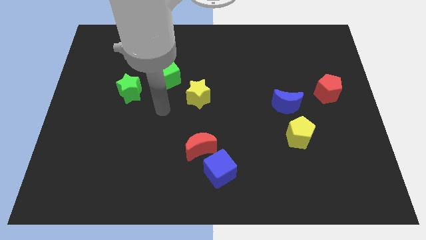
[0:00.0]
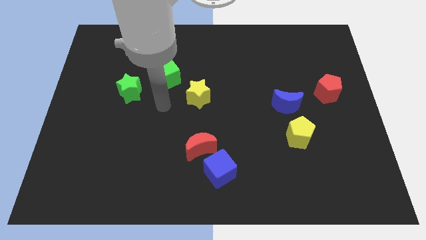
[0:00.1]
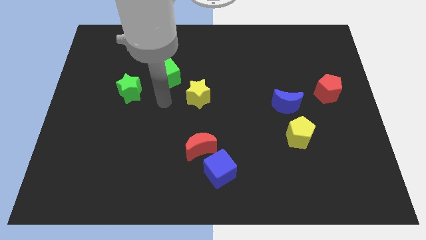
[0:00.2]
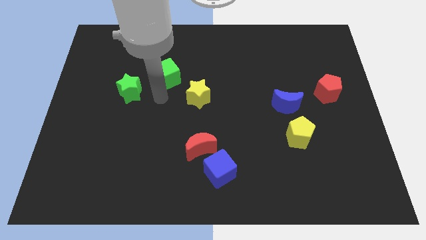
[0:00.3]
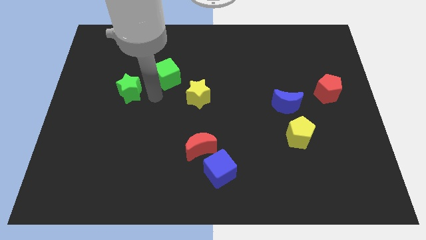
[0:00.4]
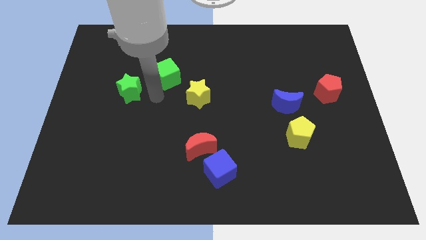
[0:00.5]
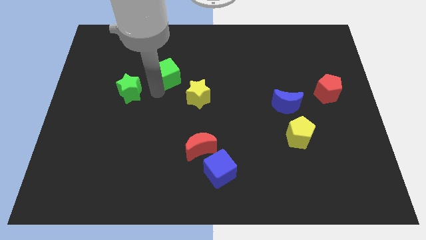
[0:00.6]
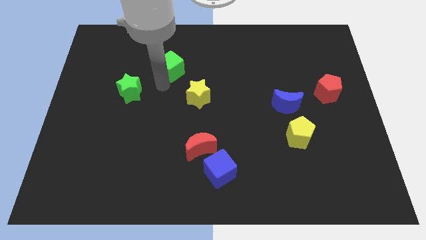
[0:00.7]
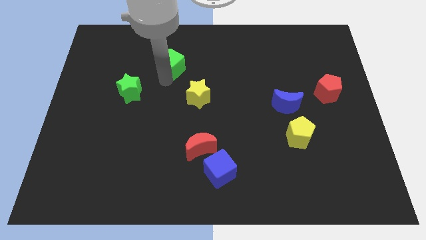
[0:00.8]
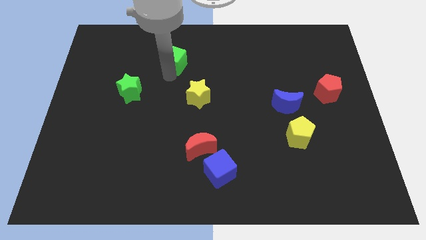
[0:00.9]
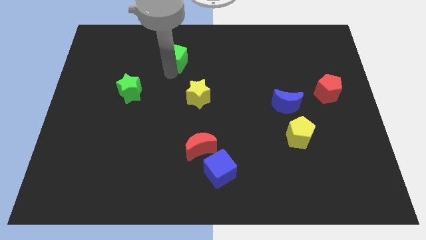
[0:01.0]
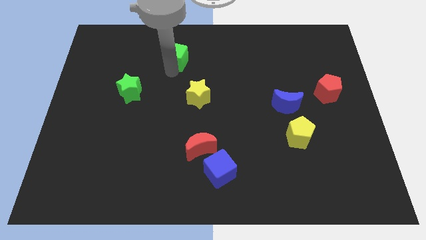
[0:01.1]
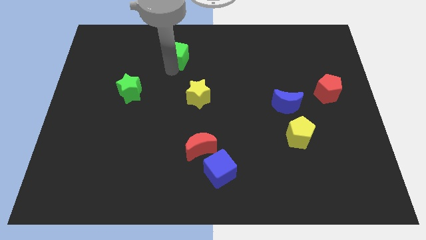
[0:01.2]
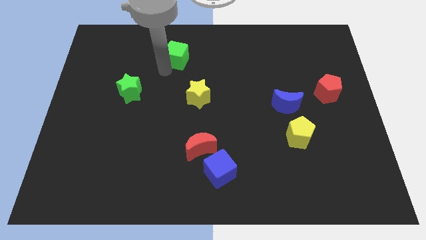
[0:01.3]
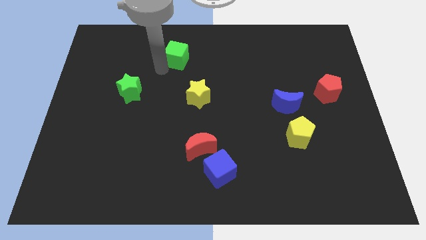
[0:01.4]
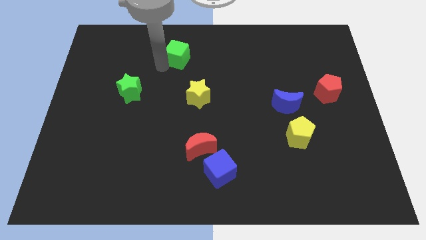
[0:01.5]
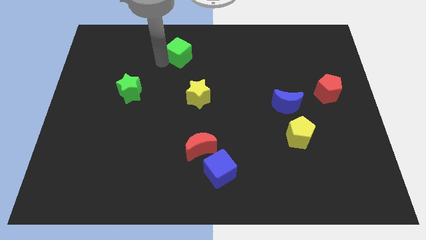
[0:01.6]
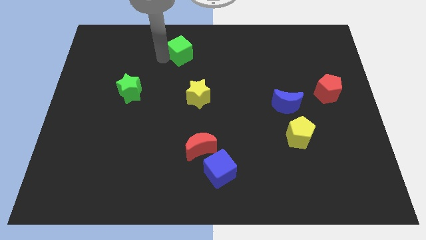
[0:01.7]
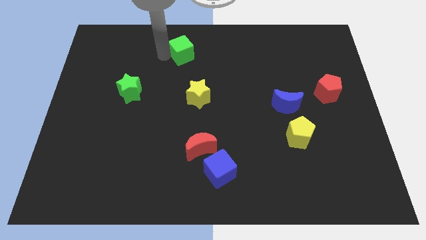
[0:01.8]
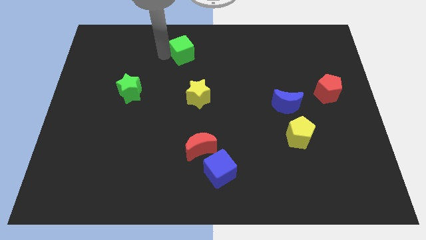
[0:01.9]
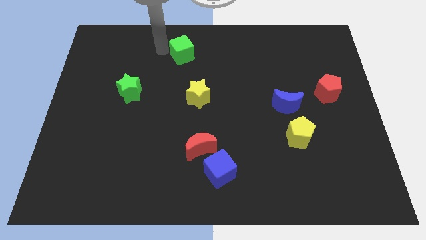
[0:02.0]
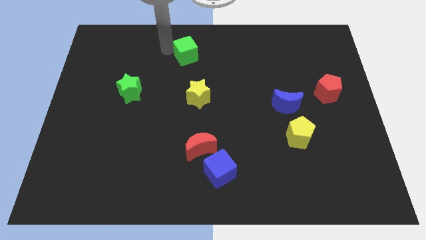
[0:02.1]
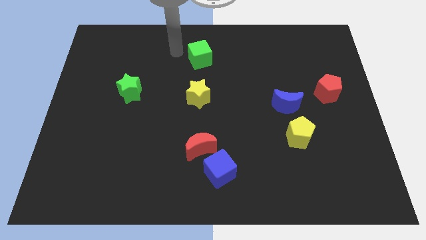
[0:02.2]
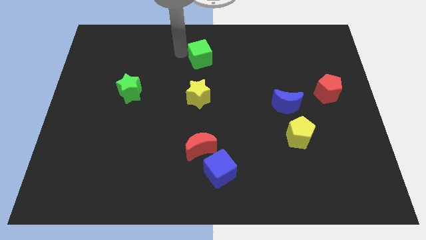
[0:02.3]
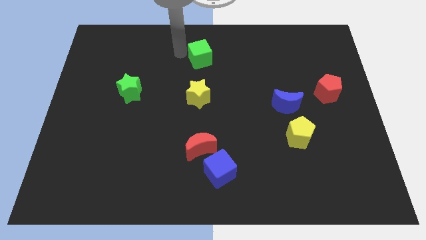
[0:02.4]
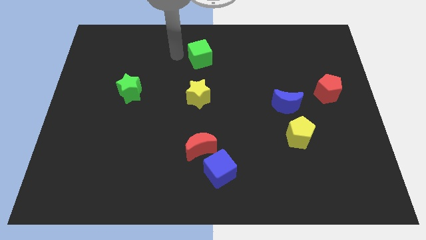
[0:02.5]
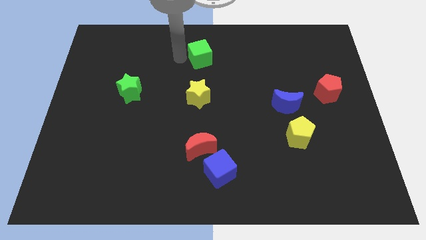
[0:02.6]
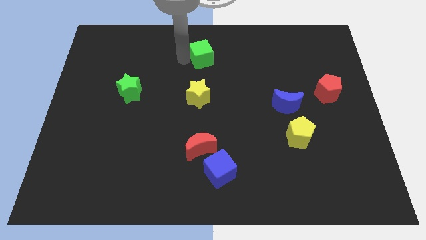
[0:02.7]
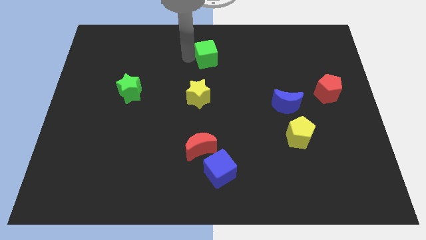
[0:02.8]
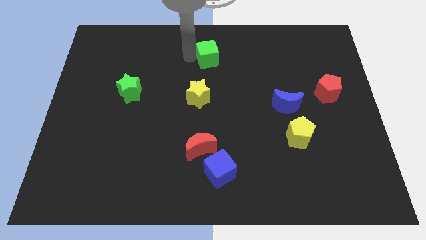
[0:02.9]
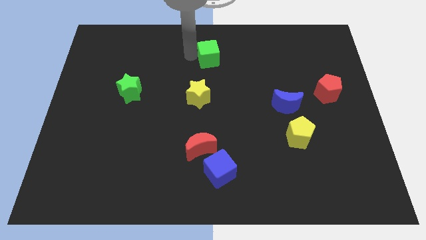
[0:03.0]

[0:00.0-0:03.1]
push the green cube to the top of the yellow star

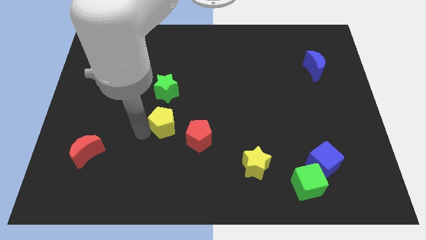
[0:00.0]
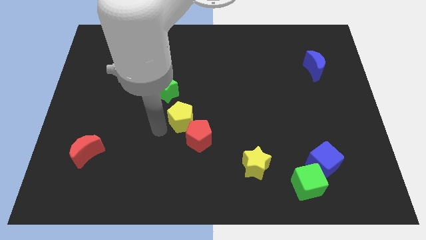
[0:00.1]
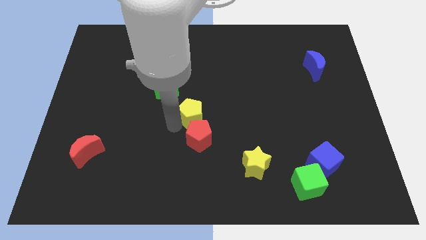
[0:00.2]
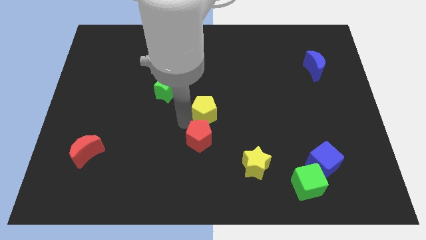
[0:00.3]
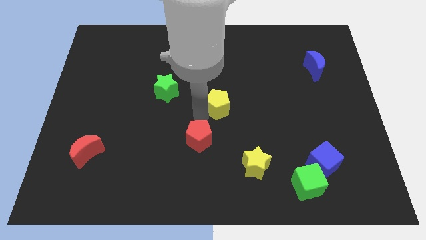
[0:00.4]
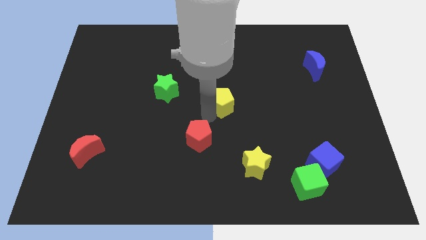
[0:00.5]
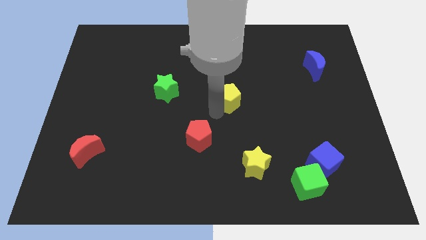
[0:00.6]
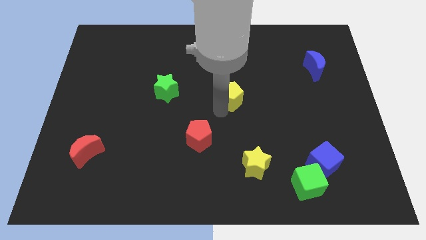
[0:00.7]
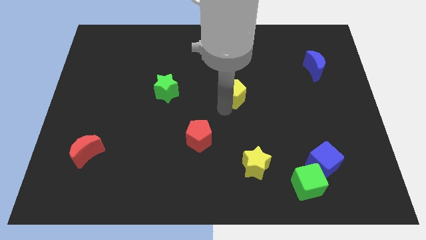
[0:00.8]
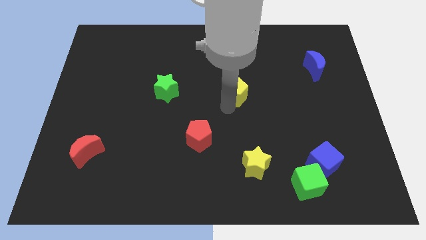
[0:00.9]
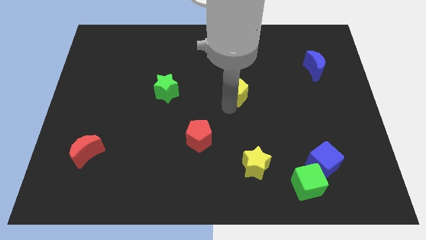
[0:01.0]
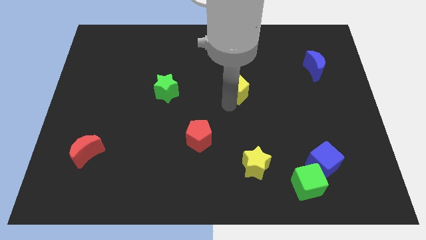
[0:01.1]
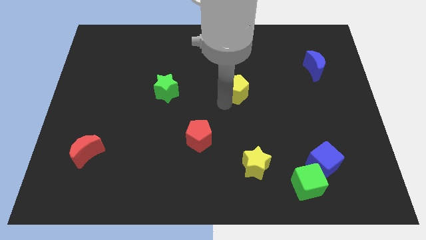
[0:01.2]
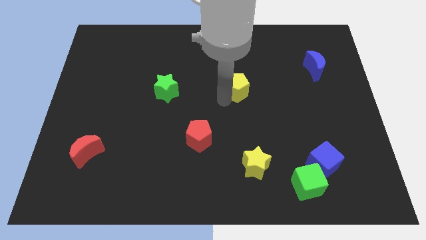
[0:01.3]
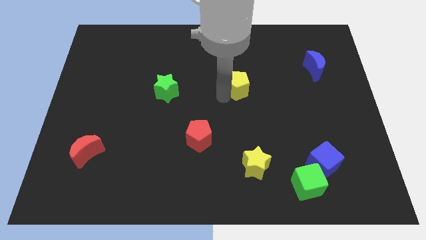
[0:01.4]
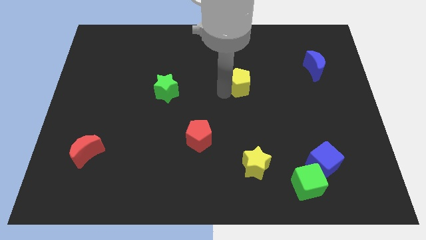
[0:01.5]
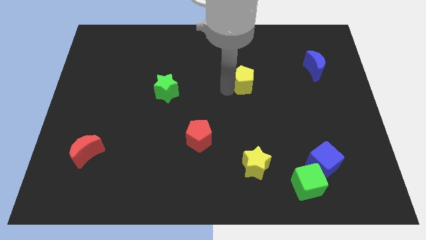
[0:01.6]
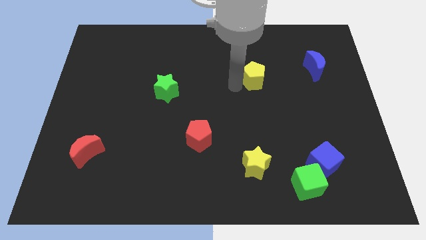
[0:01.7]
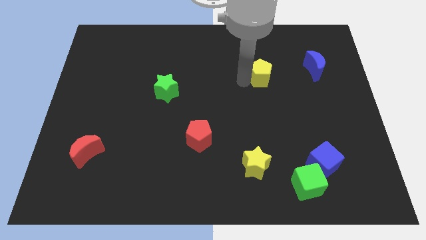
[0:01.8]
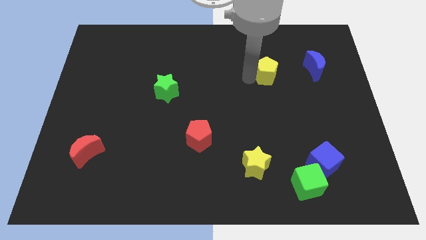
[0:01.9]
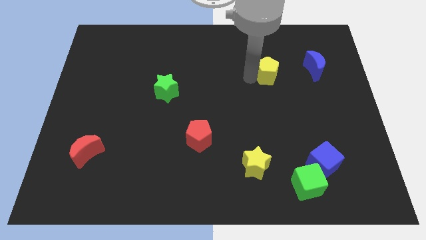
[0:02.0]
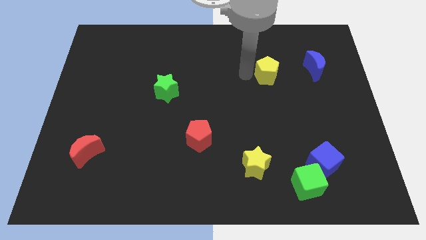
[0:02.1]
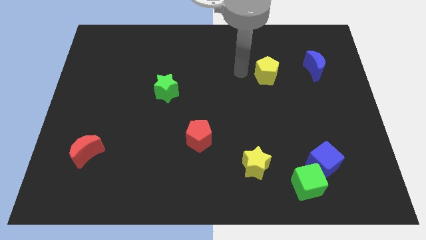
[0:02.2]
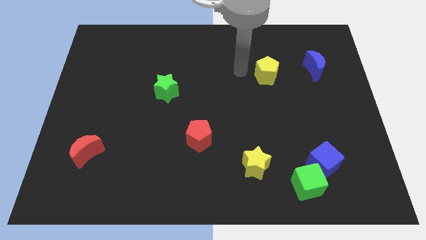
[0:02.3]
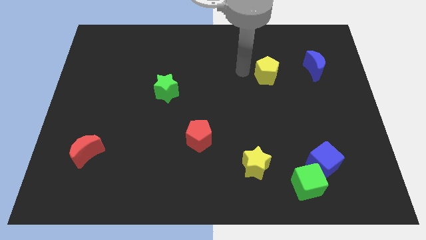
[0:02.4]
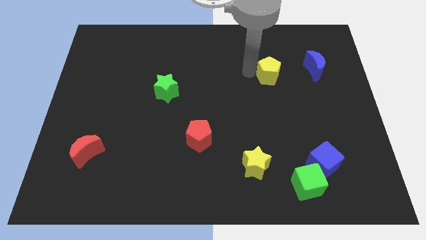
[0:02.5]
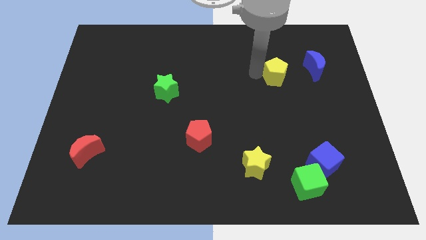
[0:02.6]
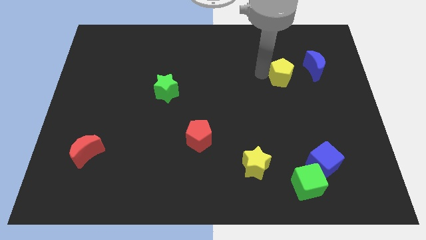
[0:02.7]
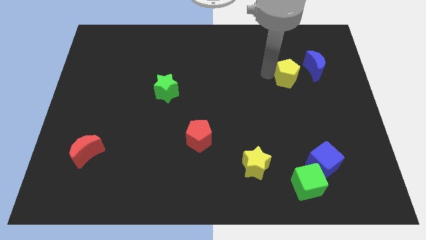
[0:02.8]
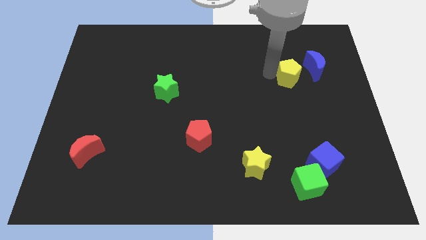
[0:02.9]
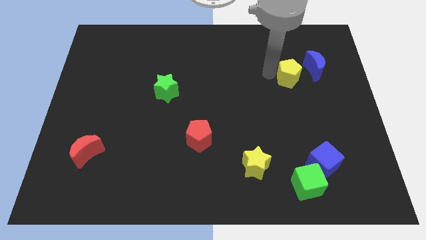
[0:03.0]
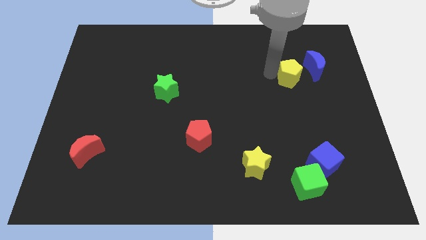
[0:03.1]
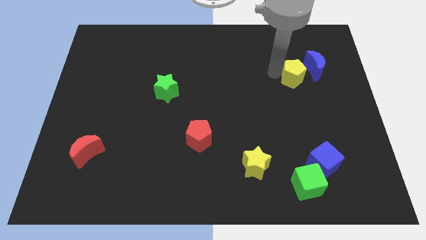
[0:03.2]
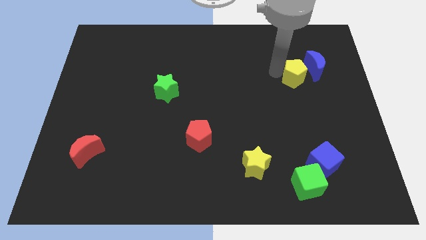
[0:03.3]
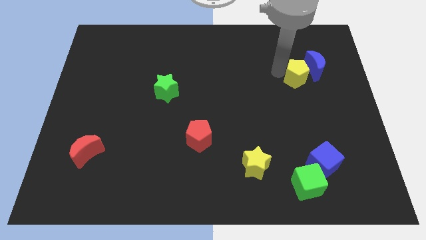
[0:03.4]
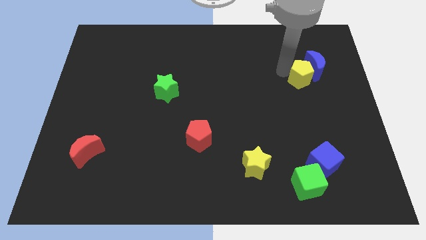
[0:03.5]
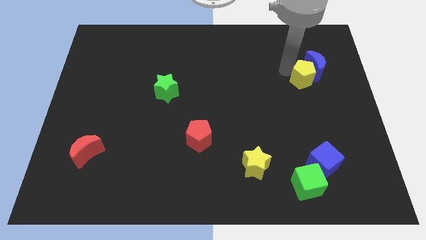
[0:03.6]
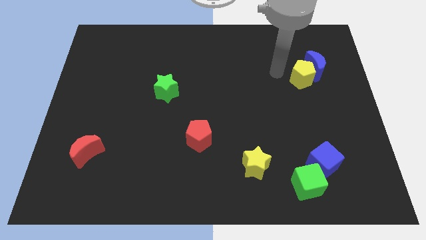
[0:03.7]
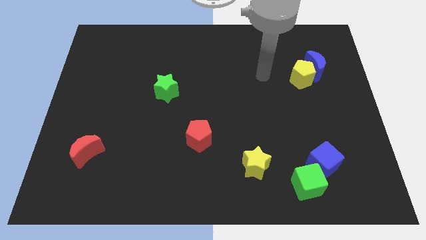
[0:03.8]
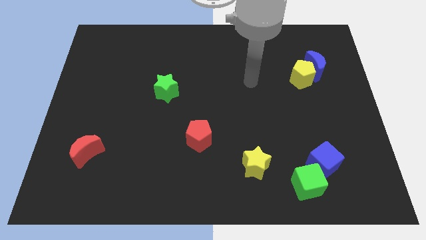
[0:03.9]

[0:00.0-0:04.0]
push the yellow pentagon into the blue moon

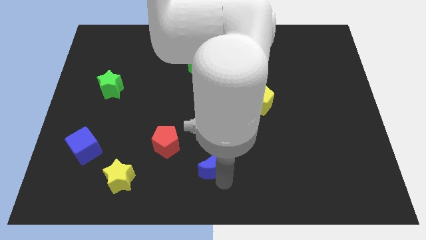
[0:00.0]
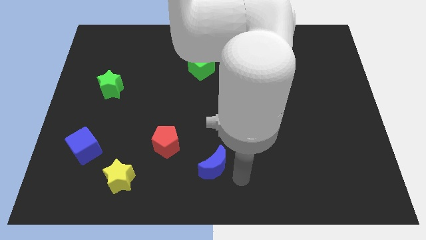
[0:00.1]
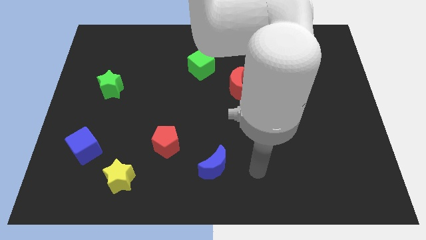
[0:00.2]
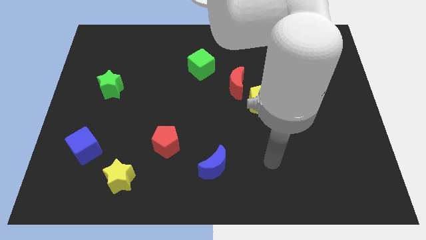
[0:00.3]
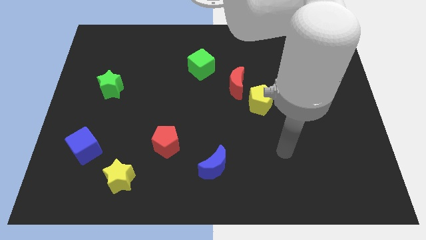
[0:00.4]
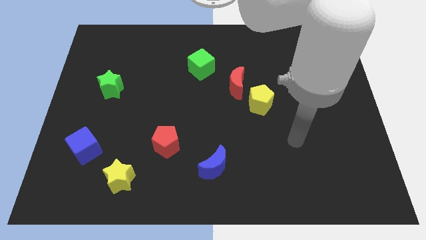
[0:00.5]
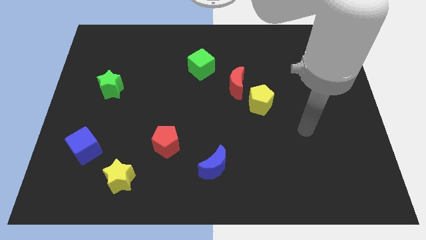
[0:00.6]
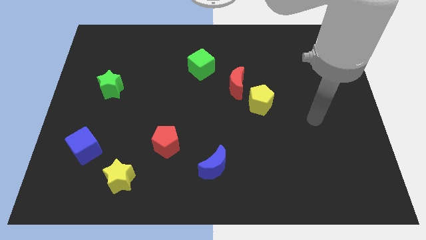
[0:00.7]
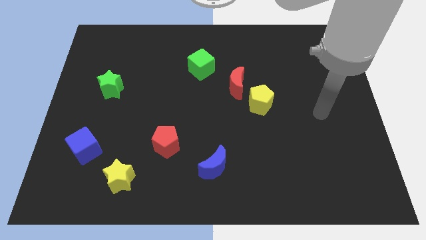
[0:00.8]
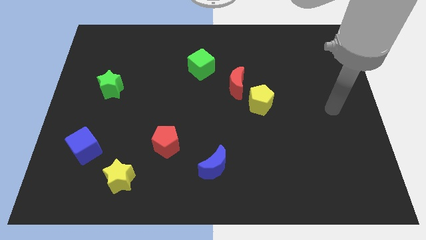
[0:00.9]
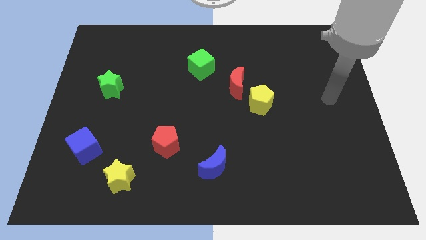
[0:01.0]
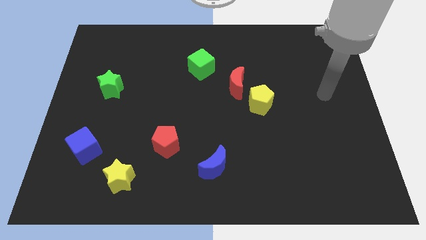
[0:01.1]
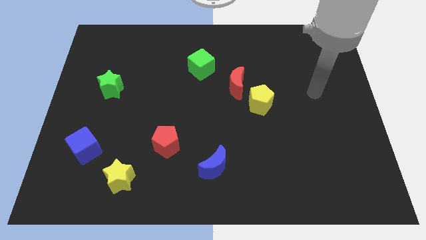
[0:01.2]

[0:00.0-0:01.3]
move the arm away from the blue moon

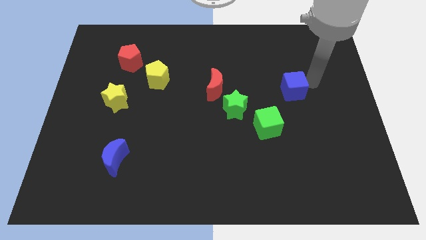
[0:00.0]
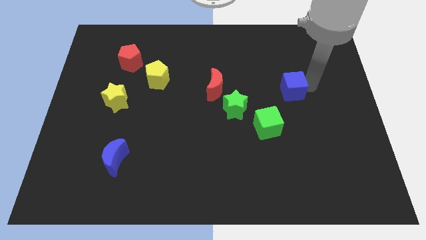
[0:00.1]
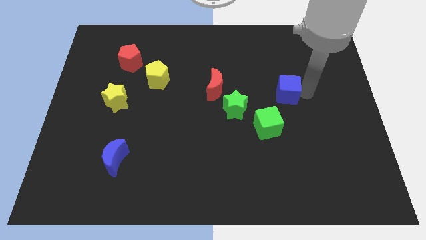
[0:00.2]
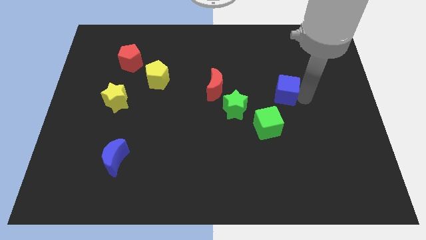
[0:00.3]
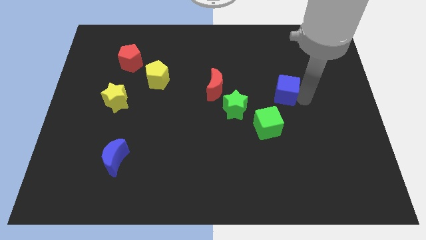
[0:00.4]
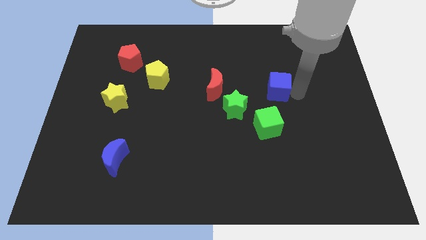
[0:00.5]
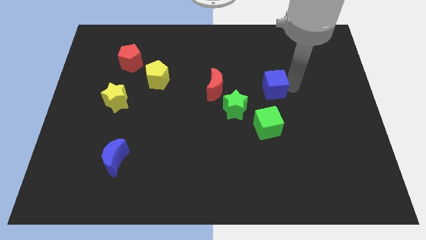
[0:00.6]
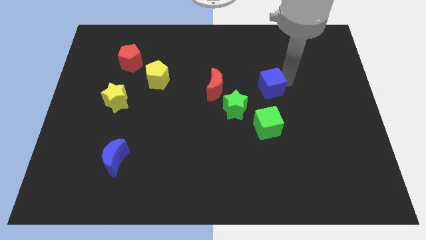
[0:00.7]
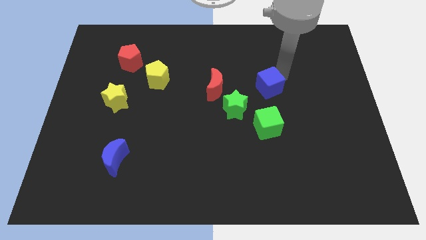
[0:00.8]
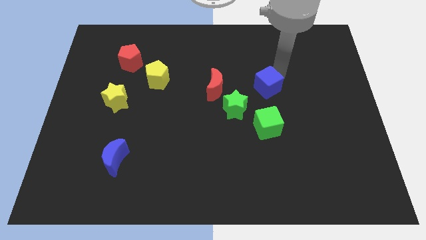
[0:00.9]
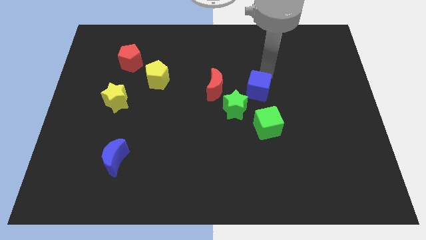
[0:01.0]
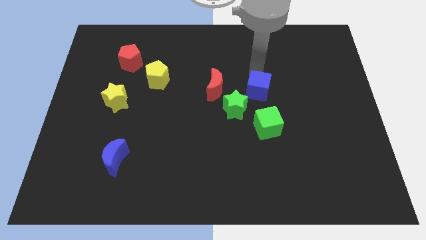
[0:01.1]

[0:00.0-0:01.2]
place the blue cube above the green cube
